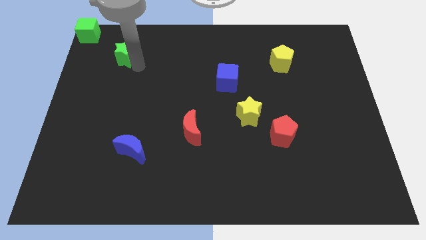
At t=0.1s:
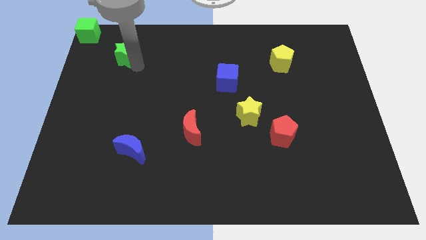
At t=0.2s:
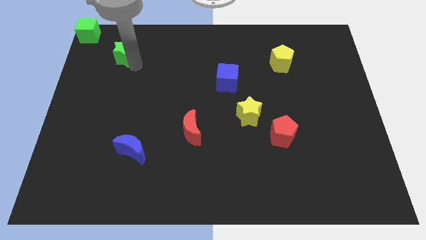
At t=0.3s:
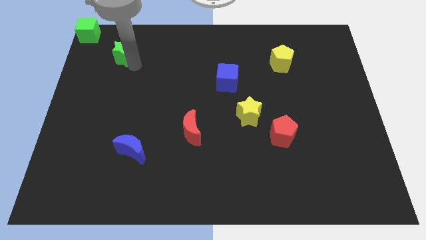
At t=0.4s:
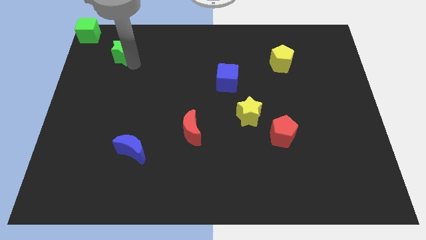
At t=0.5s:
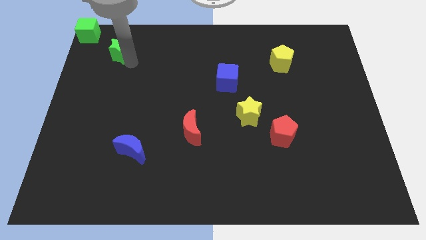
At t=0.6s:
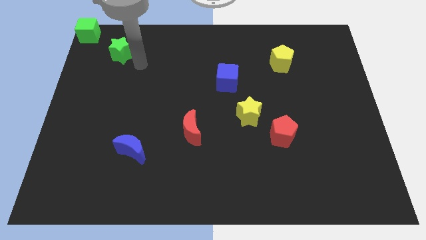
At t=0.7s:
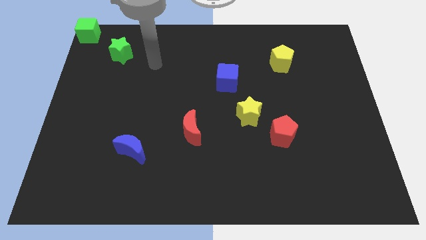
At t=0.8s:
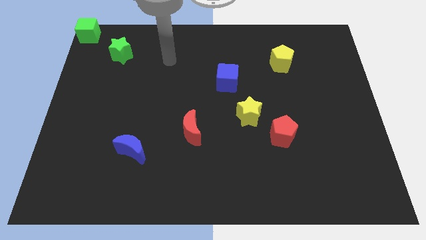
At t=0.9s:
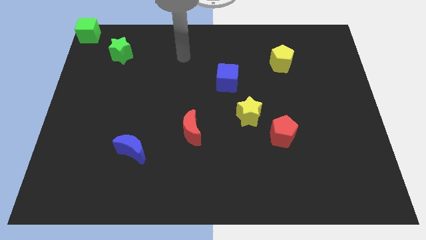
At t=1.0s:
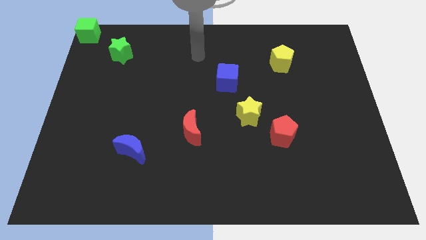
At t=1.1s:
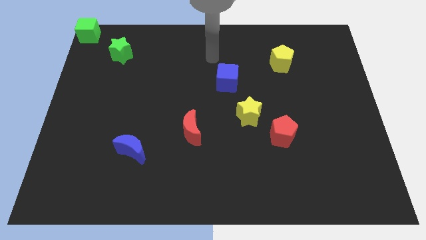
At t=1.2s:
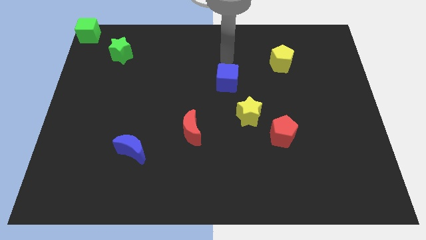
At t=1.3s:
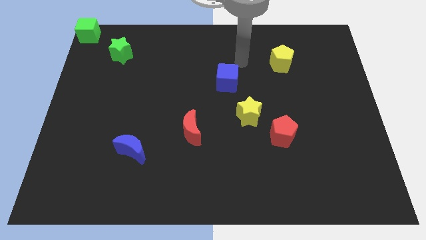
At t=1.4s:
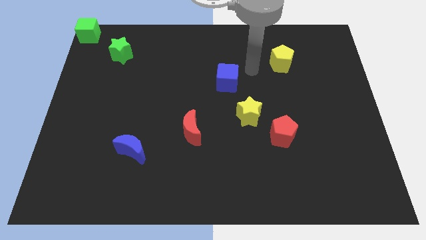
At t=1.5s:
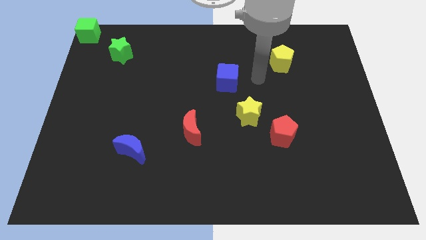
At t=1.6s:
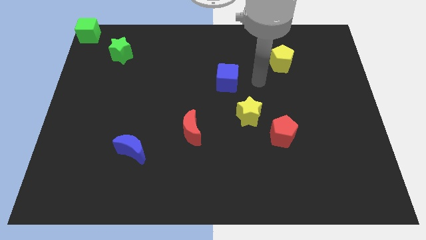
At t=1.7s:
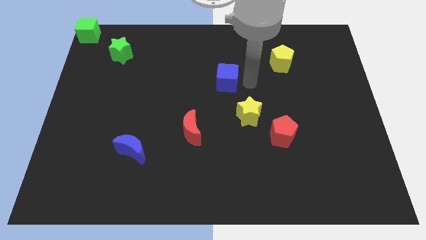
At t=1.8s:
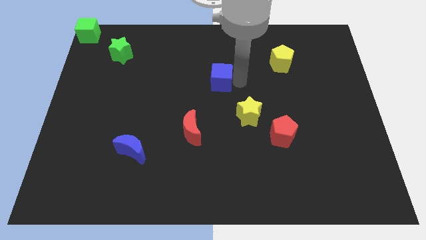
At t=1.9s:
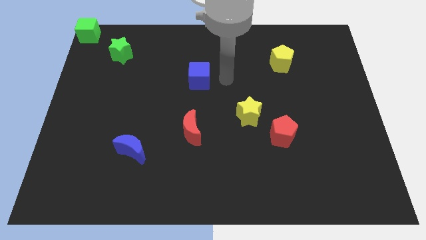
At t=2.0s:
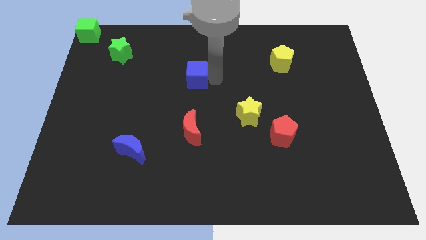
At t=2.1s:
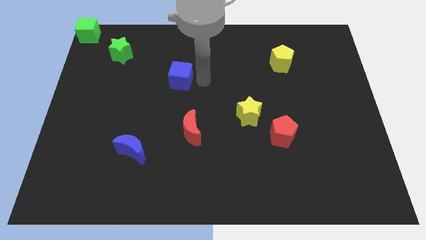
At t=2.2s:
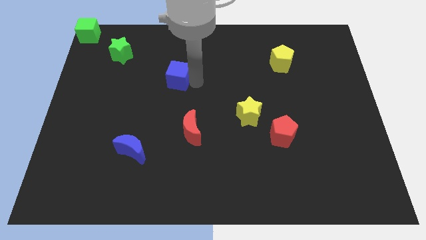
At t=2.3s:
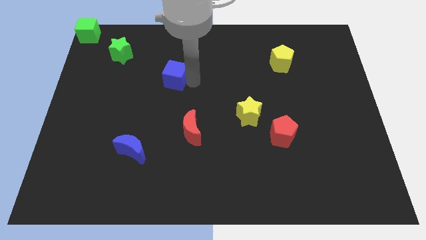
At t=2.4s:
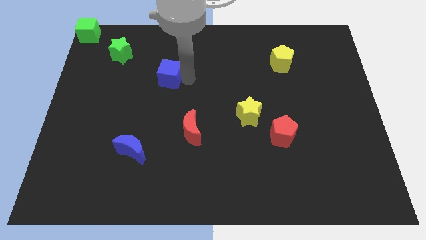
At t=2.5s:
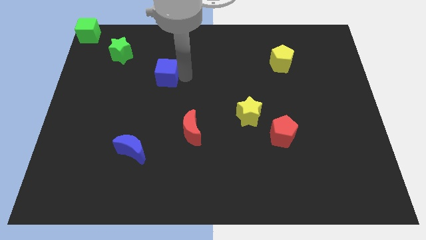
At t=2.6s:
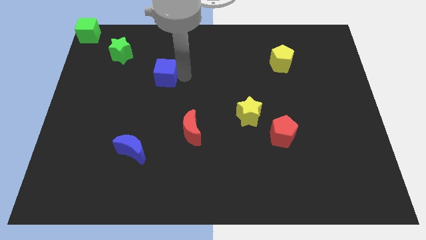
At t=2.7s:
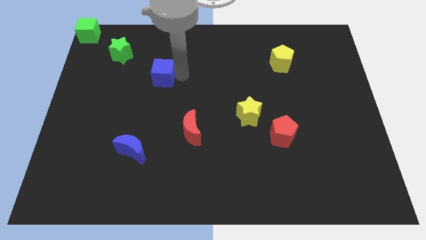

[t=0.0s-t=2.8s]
touch green star move blue cube to the center

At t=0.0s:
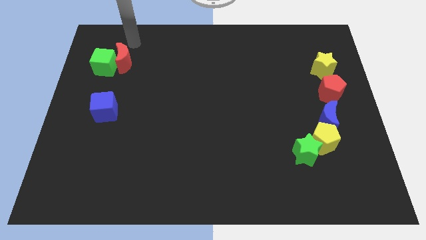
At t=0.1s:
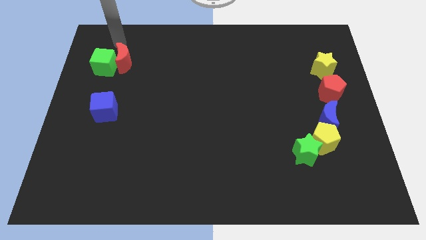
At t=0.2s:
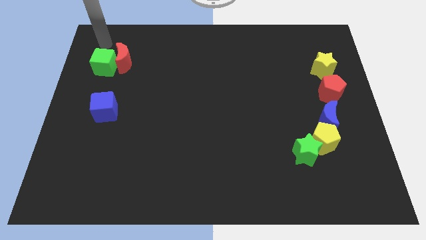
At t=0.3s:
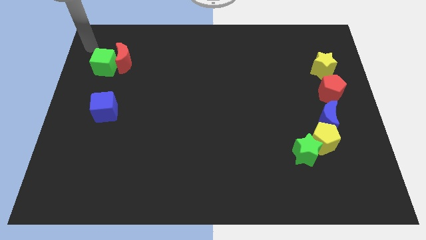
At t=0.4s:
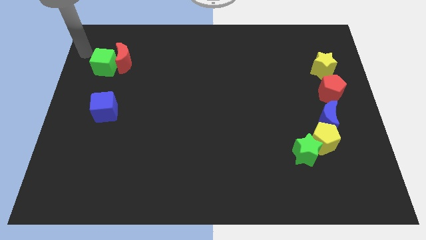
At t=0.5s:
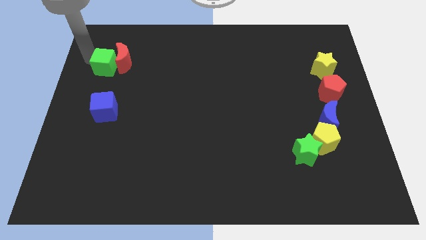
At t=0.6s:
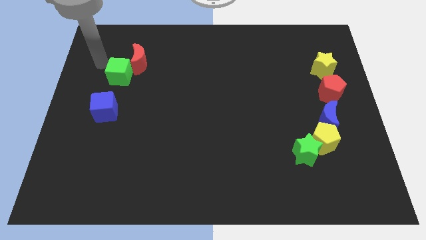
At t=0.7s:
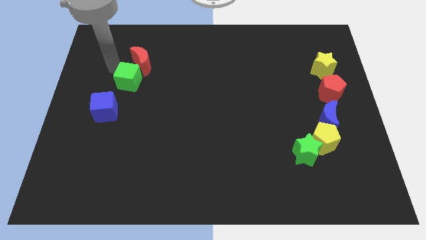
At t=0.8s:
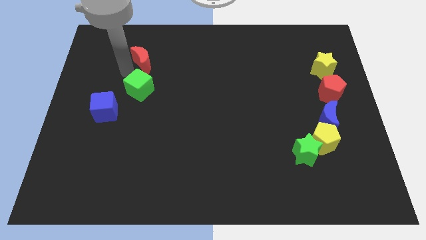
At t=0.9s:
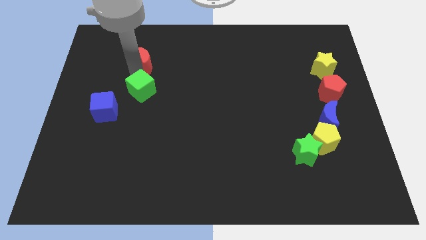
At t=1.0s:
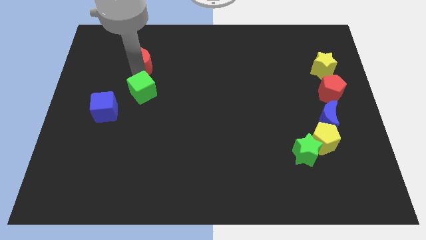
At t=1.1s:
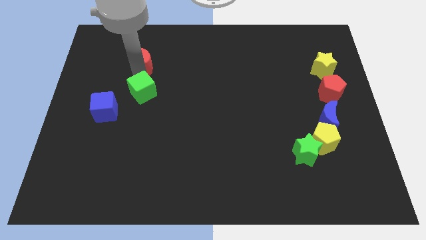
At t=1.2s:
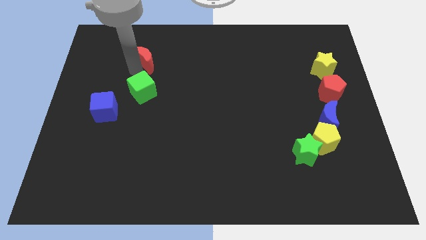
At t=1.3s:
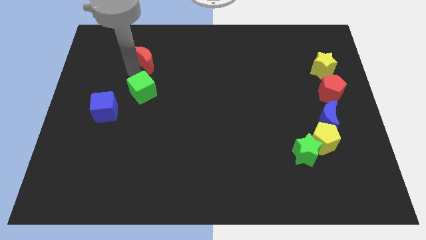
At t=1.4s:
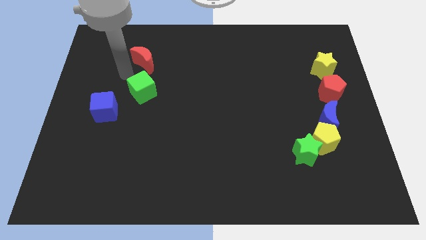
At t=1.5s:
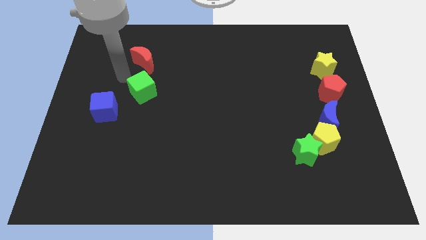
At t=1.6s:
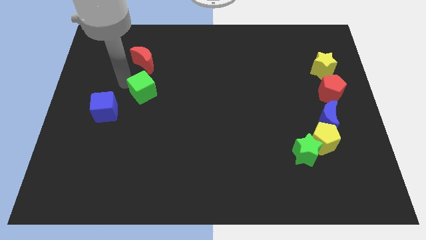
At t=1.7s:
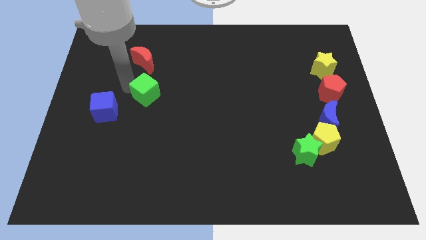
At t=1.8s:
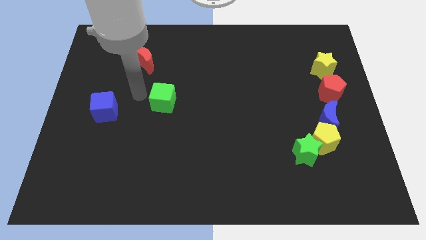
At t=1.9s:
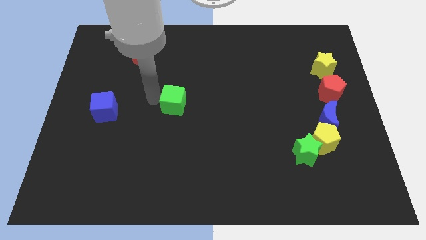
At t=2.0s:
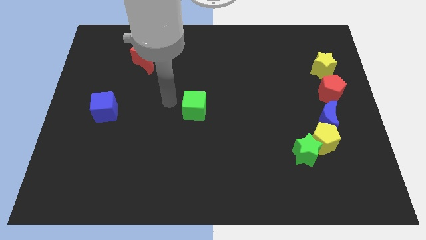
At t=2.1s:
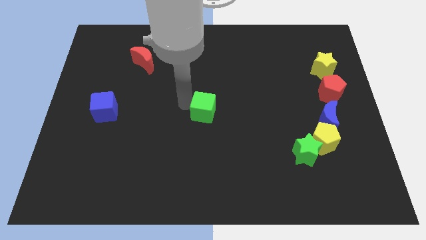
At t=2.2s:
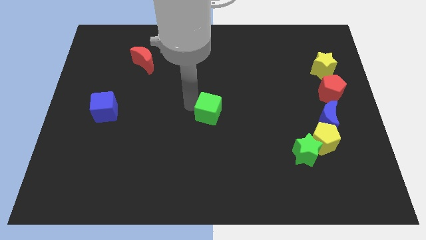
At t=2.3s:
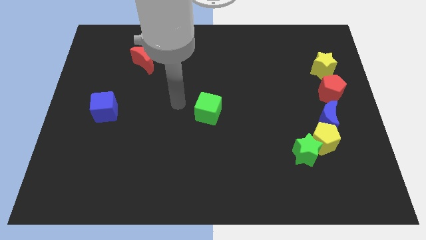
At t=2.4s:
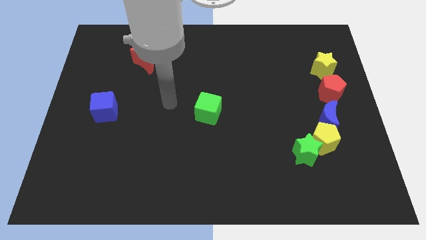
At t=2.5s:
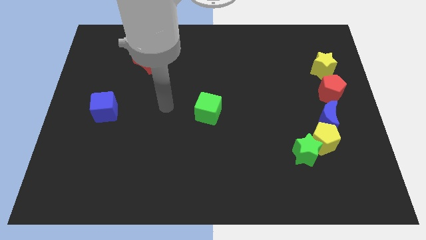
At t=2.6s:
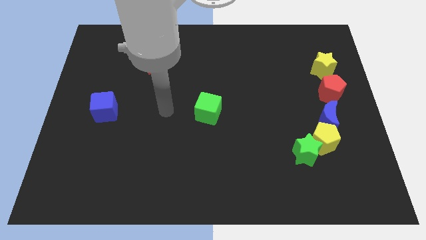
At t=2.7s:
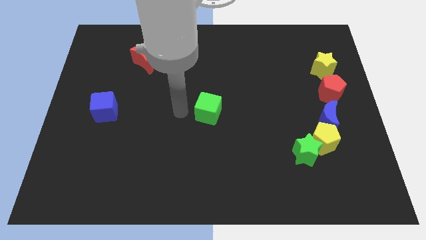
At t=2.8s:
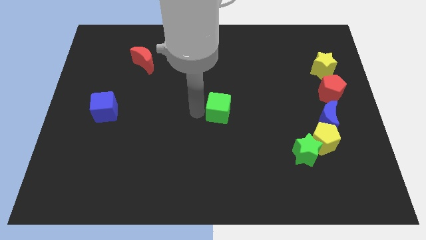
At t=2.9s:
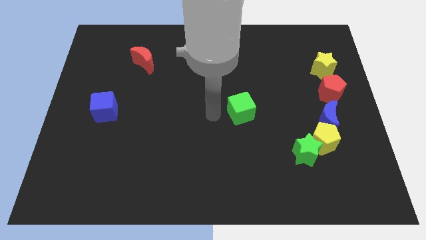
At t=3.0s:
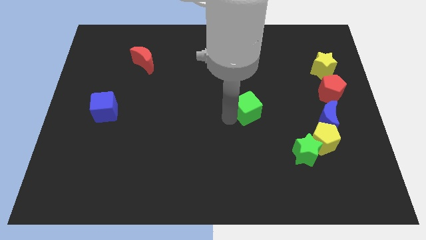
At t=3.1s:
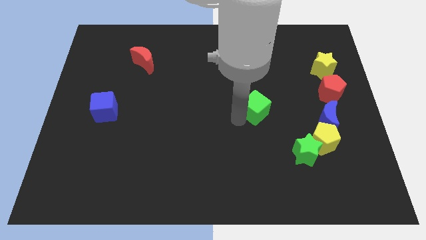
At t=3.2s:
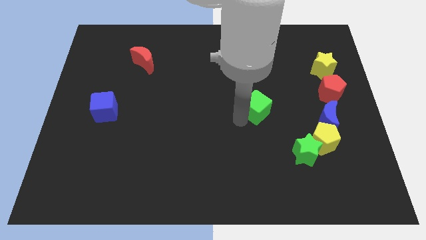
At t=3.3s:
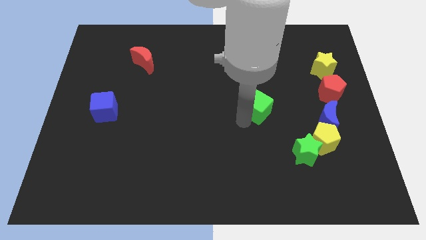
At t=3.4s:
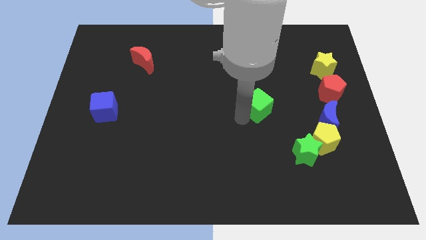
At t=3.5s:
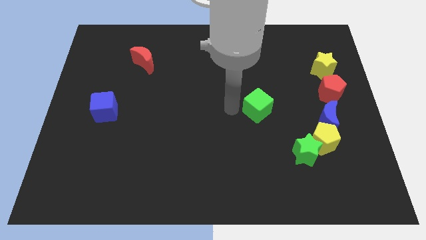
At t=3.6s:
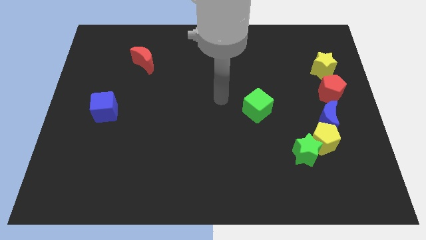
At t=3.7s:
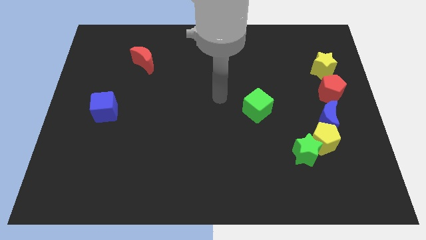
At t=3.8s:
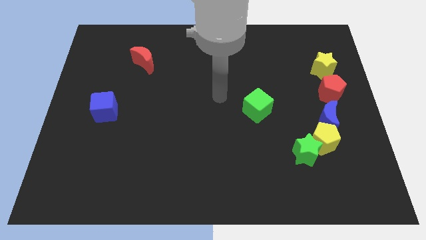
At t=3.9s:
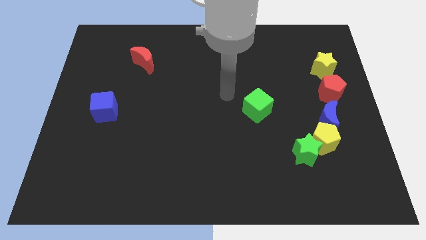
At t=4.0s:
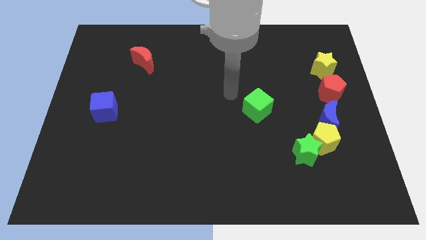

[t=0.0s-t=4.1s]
push green cube towards the right center of the board

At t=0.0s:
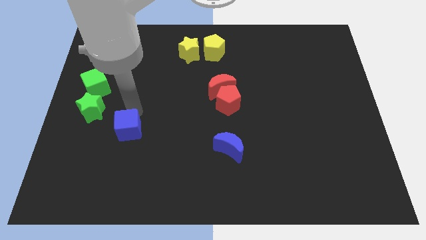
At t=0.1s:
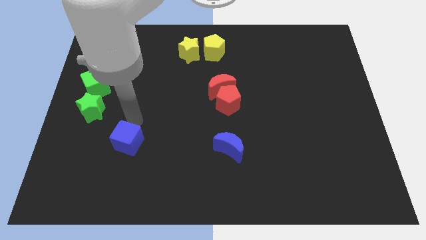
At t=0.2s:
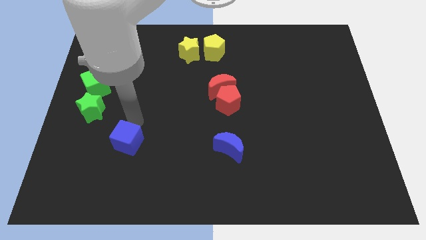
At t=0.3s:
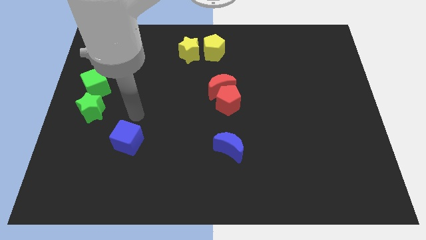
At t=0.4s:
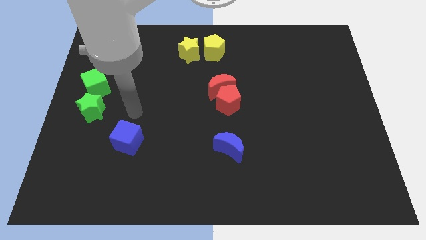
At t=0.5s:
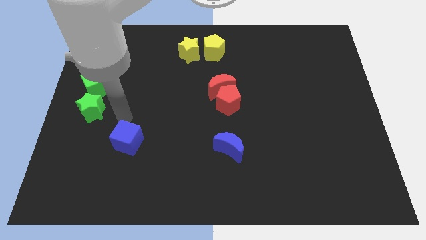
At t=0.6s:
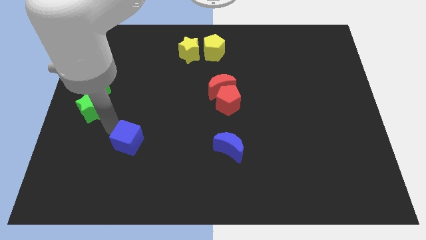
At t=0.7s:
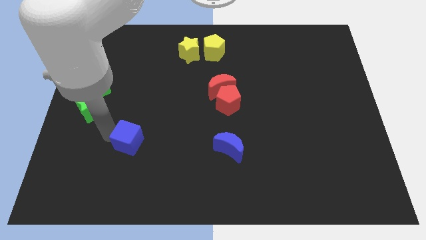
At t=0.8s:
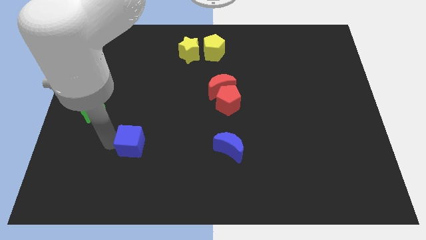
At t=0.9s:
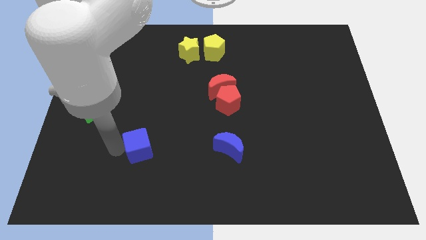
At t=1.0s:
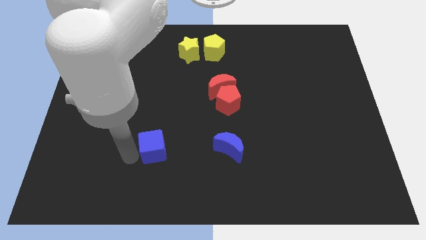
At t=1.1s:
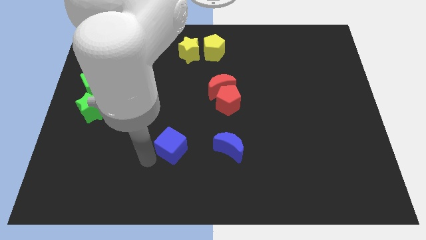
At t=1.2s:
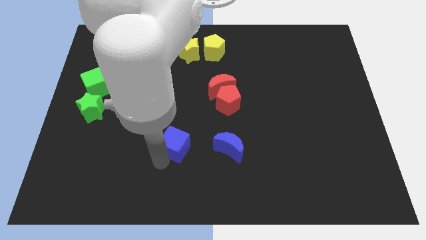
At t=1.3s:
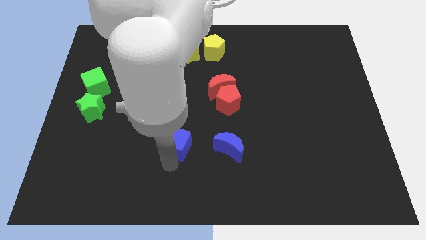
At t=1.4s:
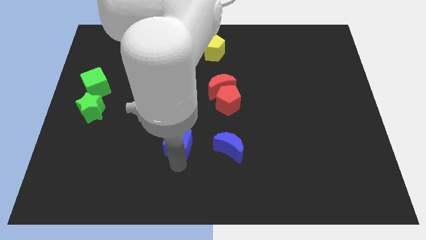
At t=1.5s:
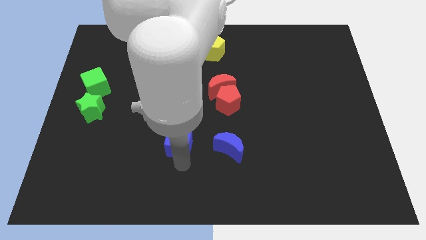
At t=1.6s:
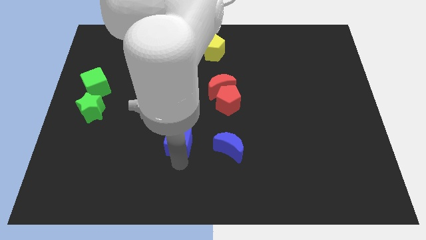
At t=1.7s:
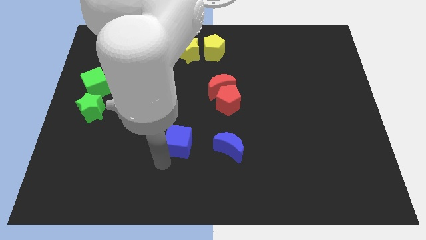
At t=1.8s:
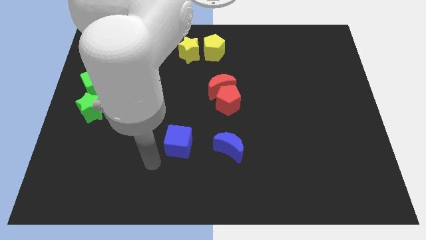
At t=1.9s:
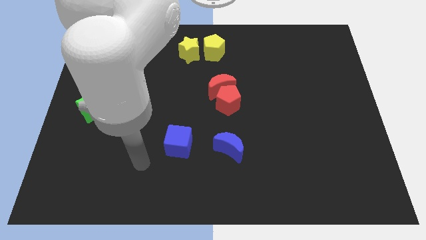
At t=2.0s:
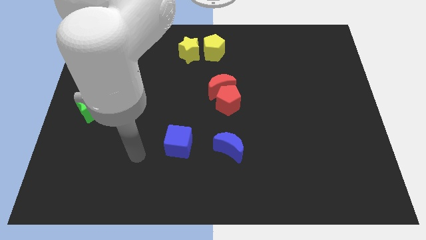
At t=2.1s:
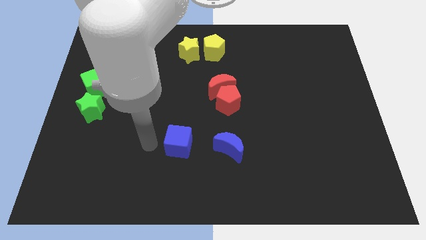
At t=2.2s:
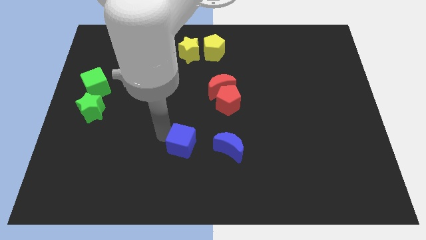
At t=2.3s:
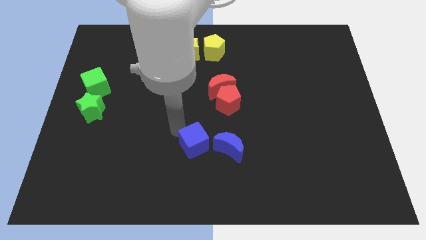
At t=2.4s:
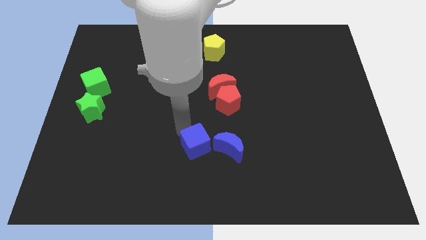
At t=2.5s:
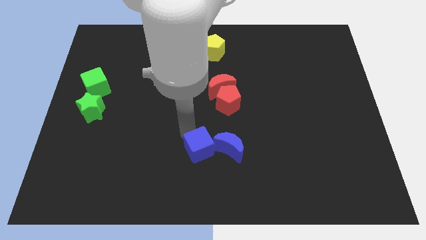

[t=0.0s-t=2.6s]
push blue cube to the left of the blue crescent
